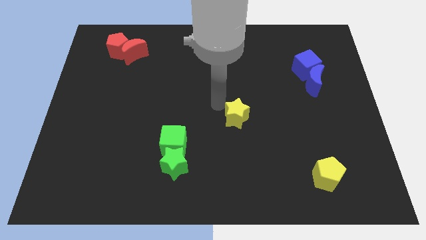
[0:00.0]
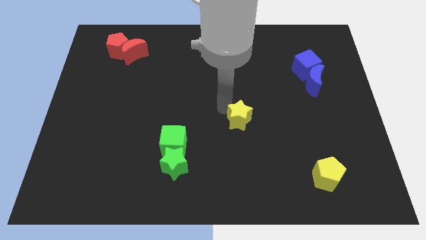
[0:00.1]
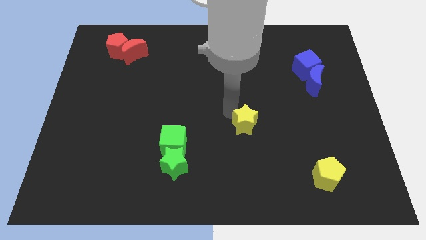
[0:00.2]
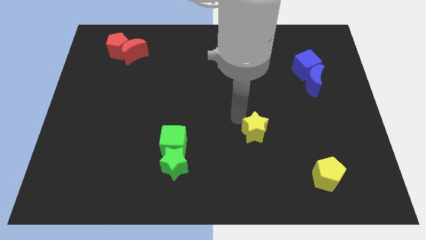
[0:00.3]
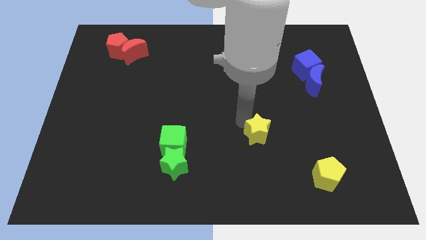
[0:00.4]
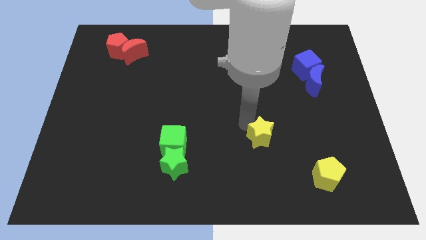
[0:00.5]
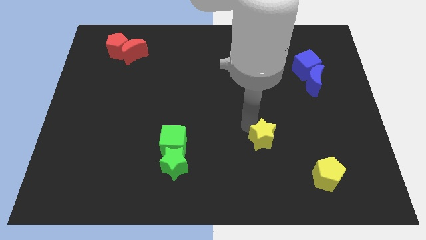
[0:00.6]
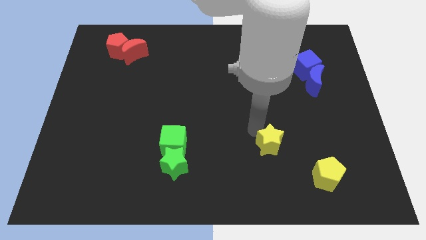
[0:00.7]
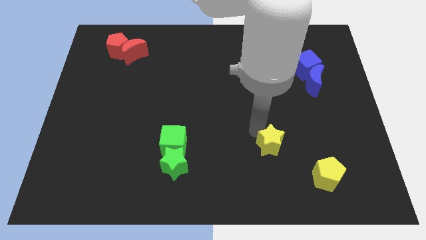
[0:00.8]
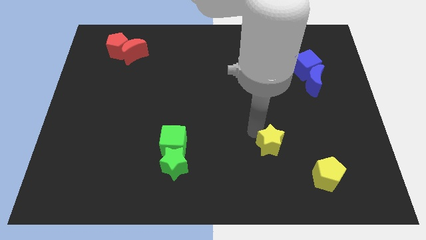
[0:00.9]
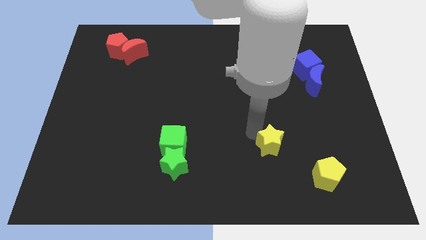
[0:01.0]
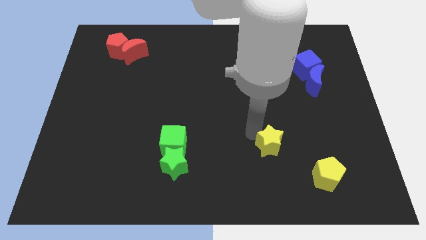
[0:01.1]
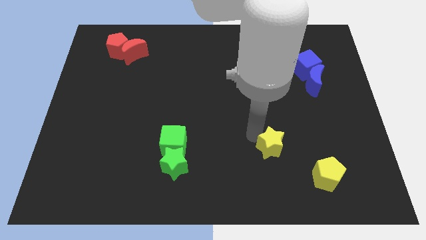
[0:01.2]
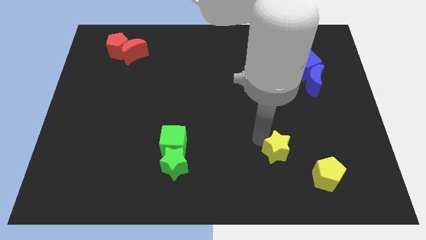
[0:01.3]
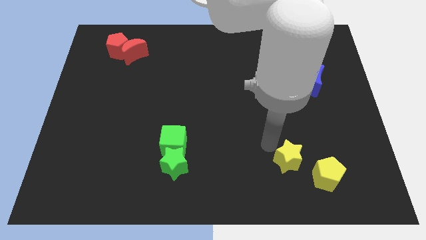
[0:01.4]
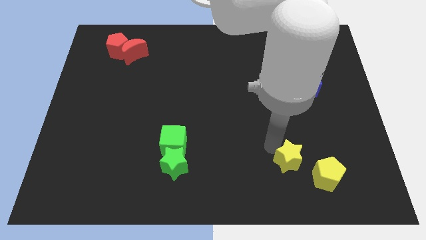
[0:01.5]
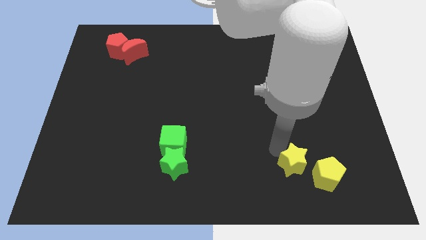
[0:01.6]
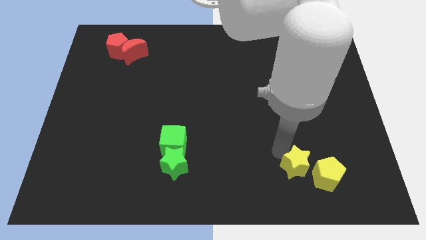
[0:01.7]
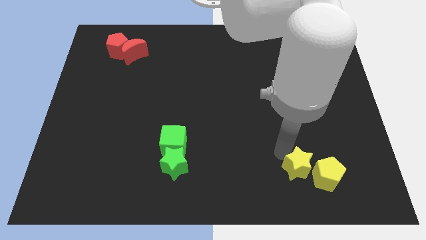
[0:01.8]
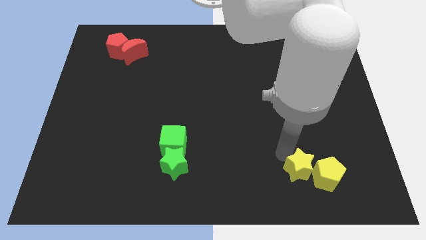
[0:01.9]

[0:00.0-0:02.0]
move the yellow star to the top left of the yellow pentagon

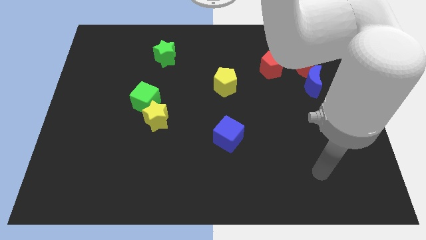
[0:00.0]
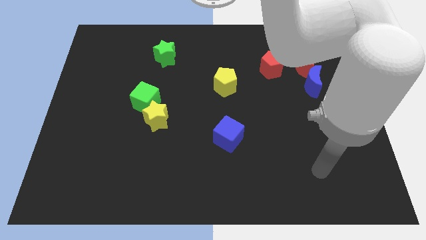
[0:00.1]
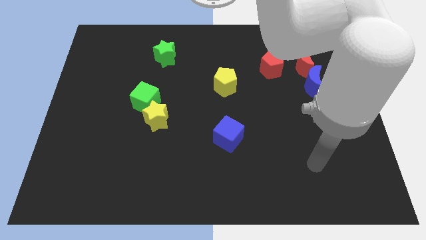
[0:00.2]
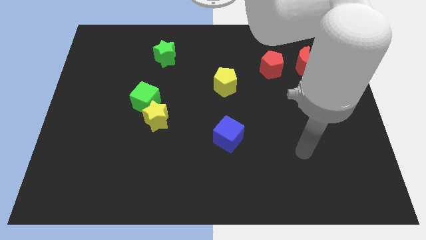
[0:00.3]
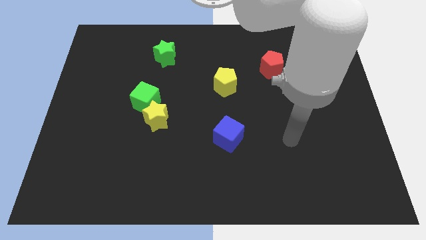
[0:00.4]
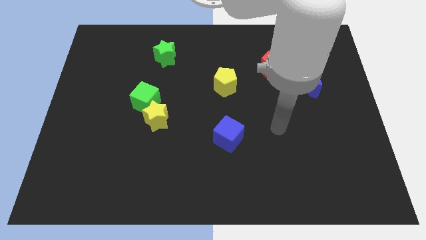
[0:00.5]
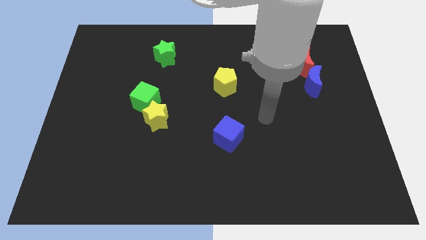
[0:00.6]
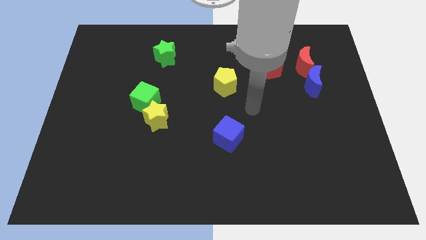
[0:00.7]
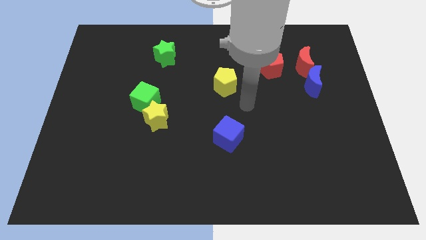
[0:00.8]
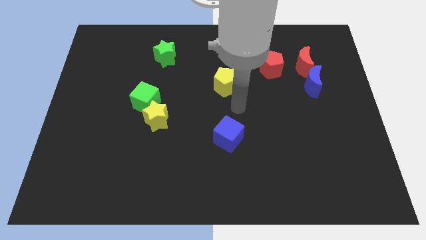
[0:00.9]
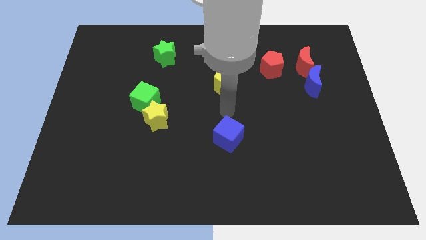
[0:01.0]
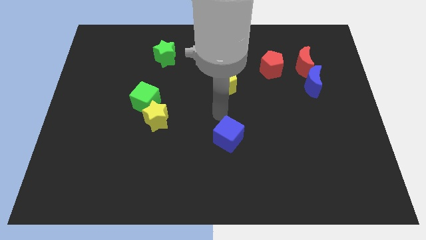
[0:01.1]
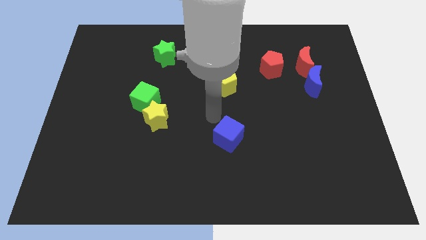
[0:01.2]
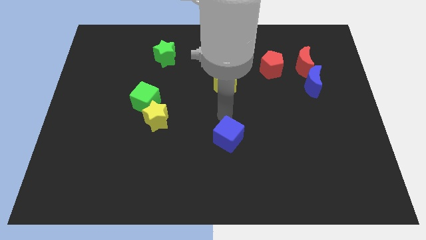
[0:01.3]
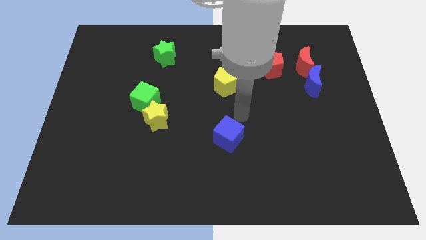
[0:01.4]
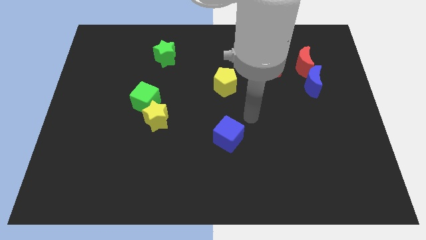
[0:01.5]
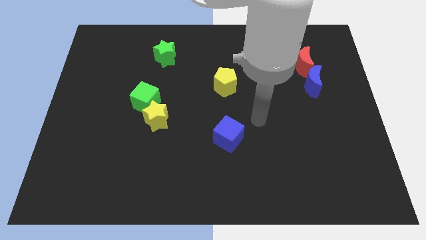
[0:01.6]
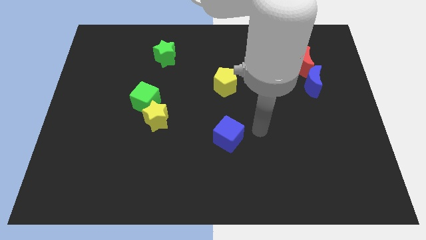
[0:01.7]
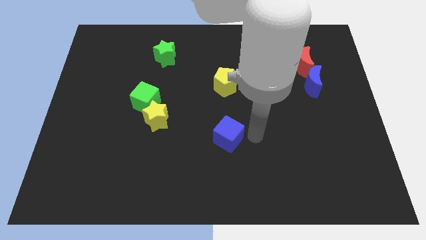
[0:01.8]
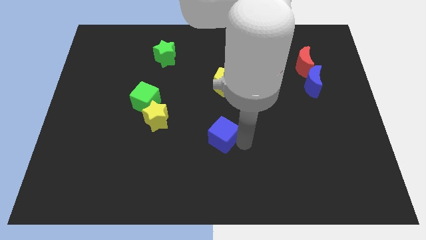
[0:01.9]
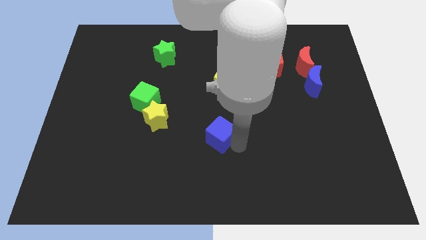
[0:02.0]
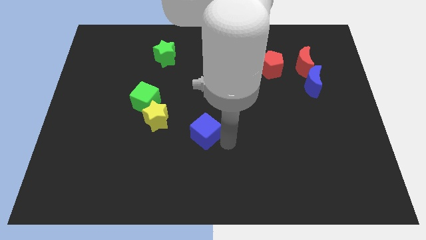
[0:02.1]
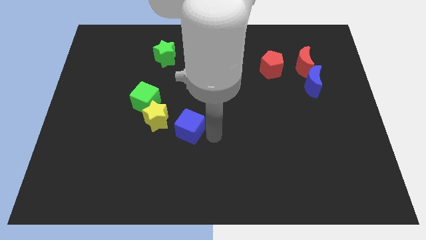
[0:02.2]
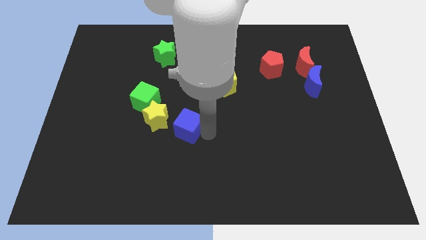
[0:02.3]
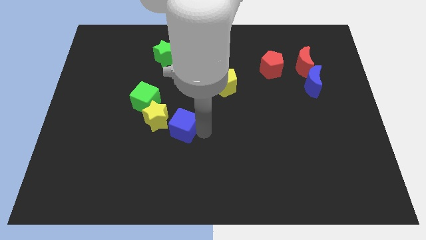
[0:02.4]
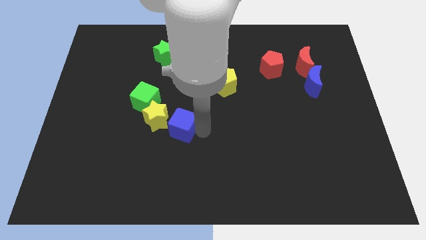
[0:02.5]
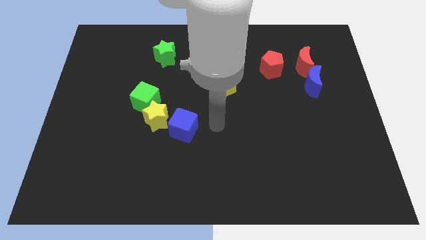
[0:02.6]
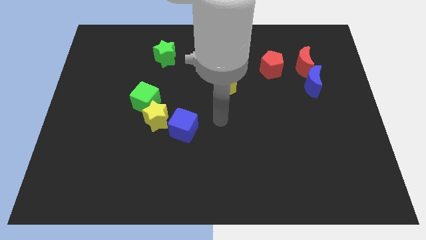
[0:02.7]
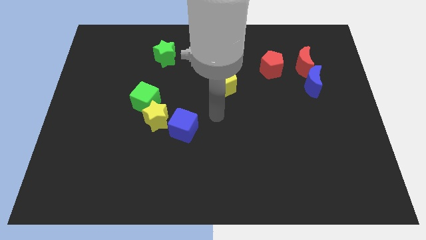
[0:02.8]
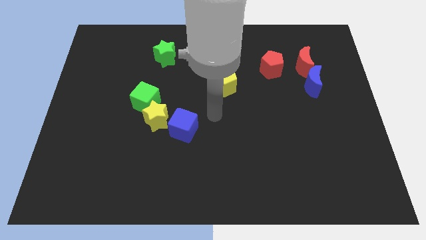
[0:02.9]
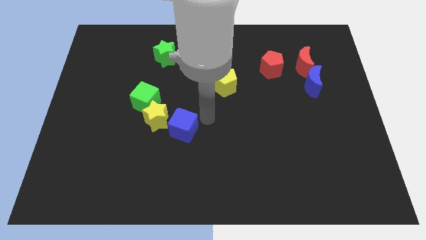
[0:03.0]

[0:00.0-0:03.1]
move your arm on the top right of the blue cube

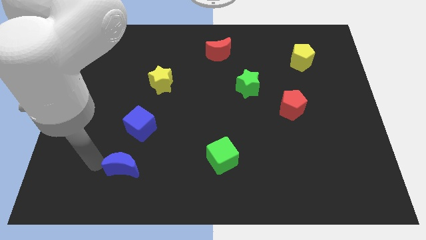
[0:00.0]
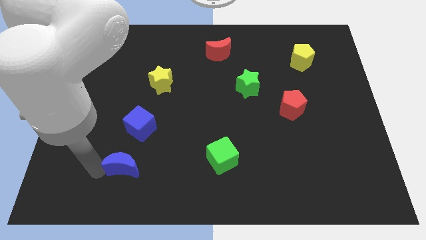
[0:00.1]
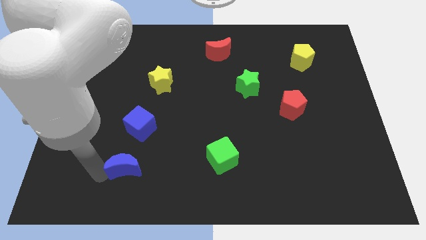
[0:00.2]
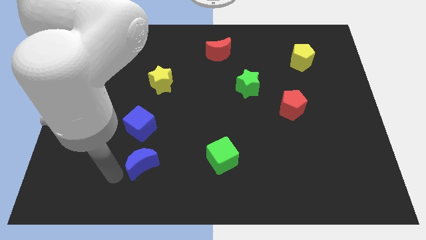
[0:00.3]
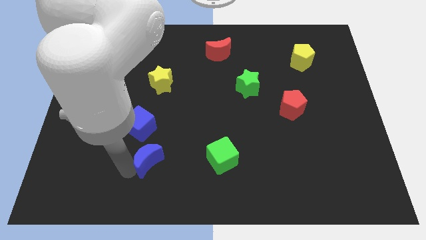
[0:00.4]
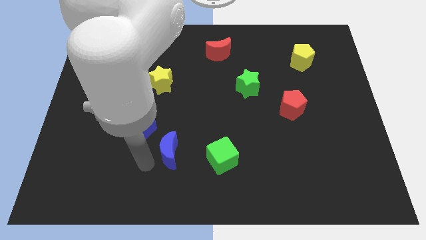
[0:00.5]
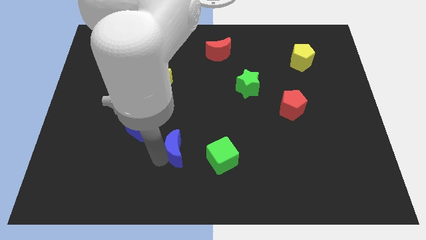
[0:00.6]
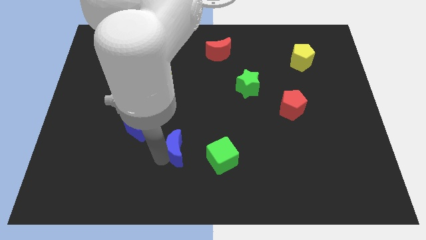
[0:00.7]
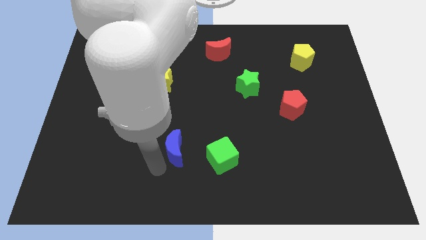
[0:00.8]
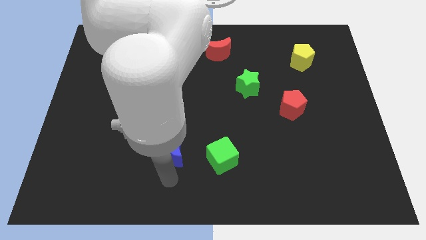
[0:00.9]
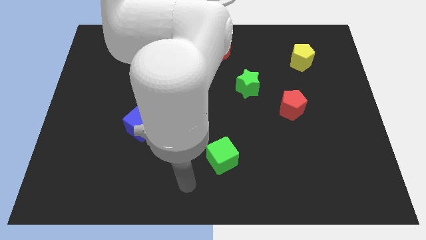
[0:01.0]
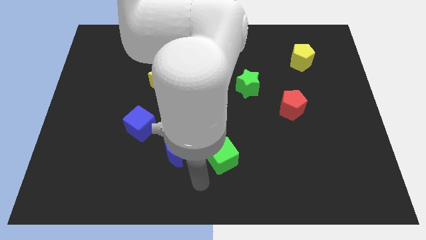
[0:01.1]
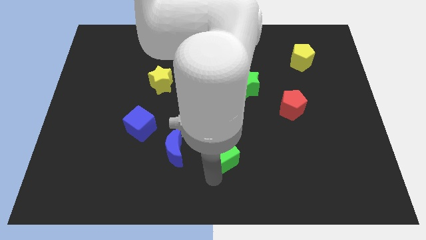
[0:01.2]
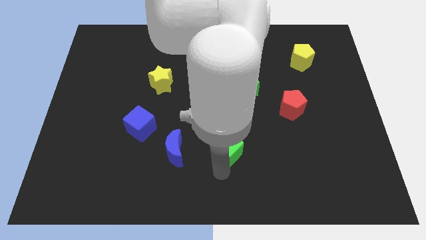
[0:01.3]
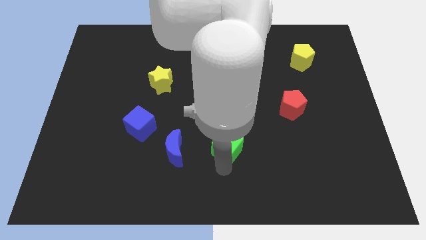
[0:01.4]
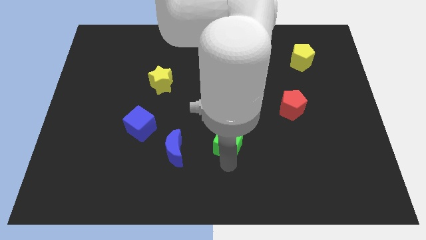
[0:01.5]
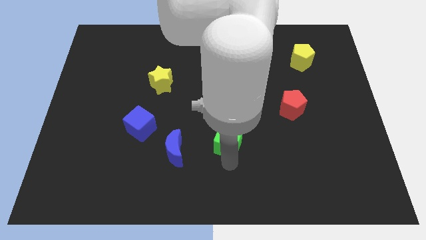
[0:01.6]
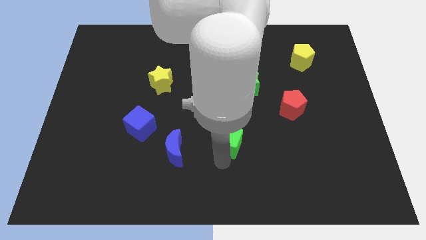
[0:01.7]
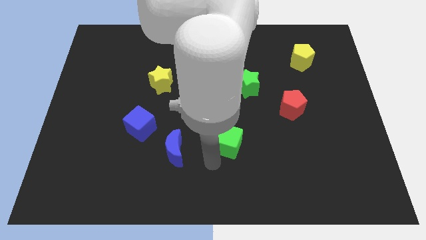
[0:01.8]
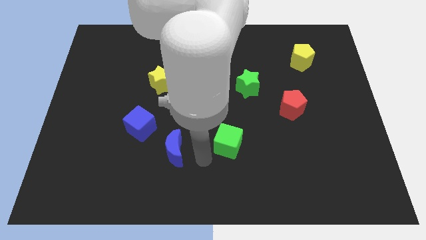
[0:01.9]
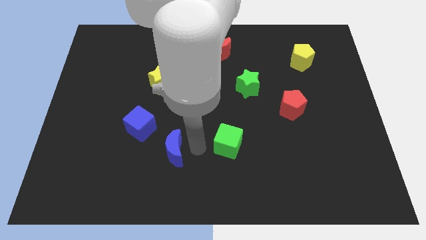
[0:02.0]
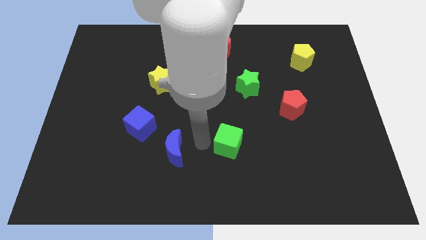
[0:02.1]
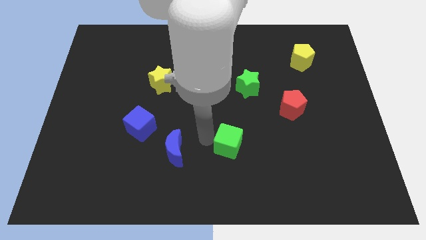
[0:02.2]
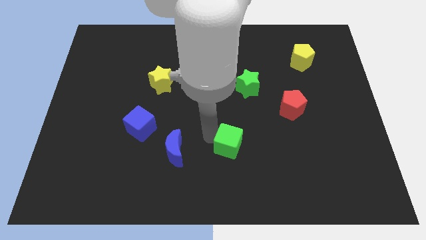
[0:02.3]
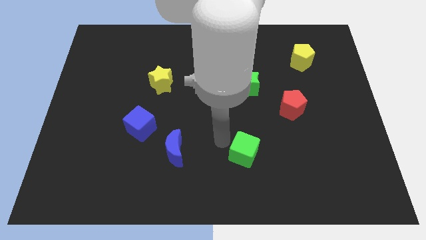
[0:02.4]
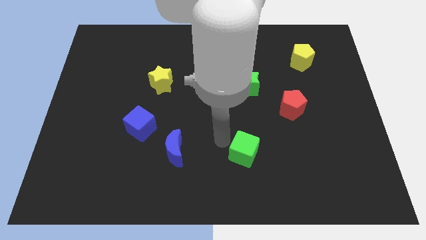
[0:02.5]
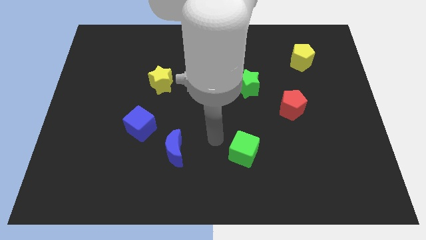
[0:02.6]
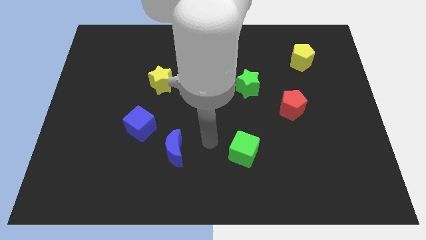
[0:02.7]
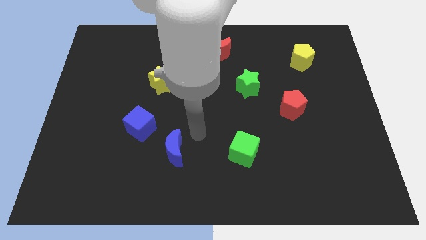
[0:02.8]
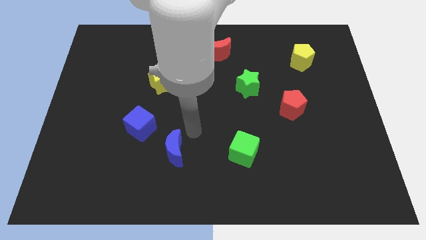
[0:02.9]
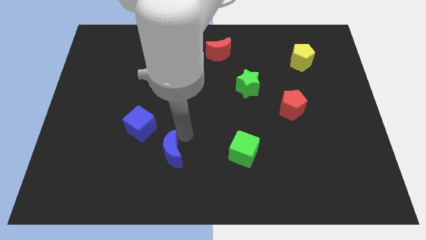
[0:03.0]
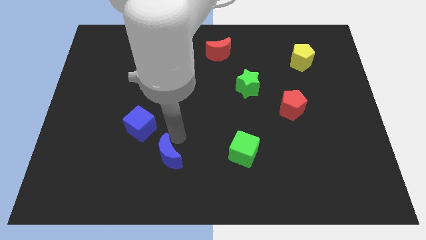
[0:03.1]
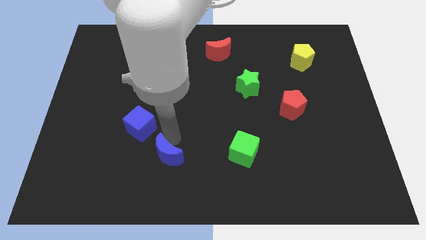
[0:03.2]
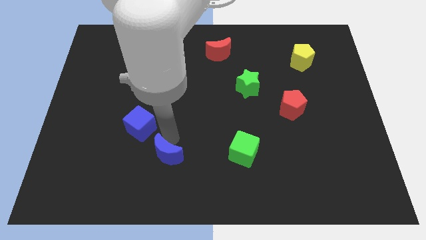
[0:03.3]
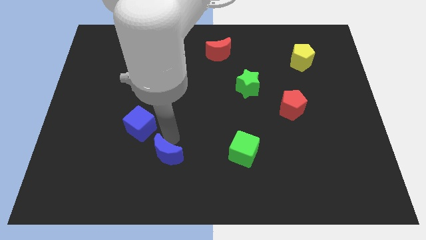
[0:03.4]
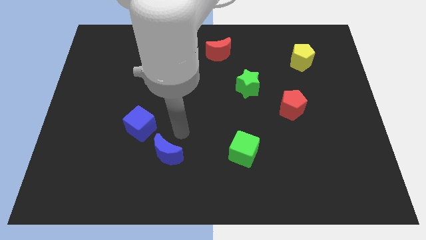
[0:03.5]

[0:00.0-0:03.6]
move the blue crescent towards left to the green cube

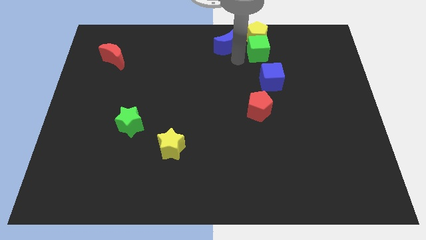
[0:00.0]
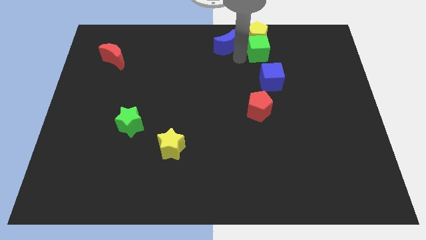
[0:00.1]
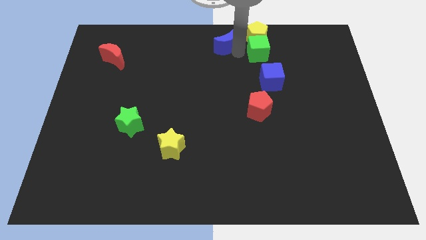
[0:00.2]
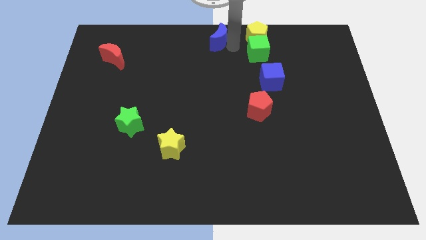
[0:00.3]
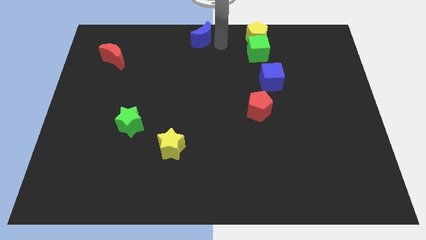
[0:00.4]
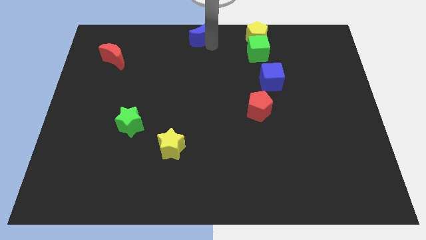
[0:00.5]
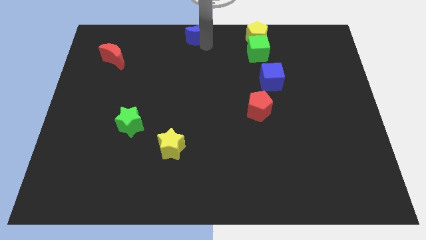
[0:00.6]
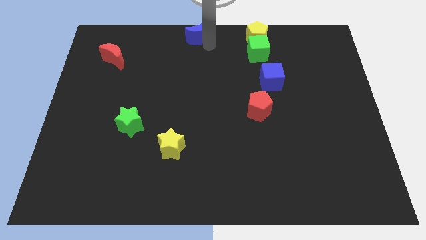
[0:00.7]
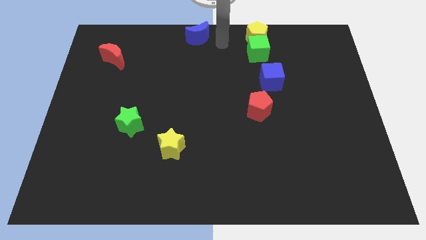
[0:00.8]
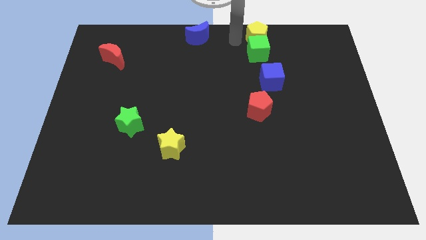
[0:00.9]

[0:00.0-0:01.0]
separate blue moon from green cube
